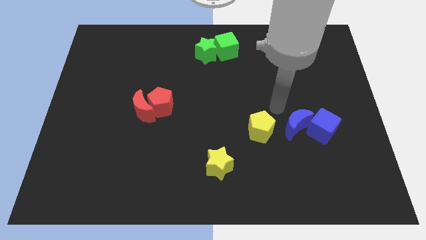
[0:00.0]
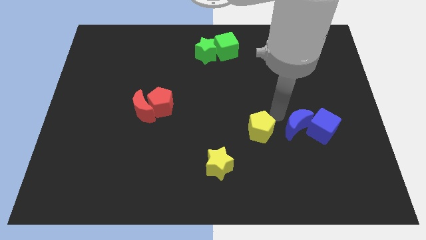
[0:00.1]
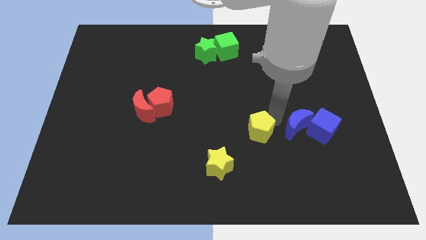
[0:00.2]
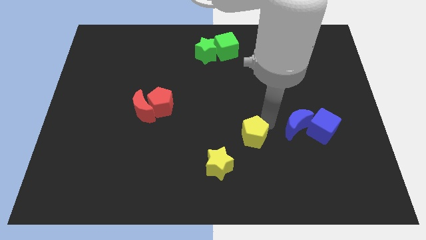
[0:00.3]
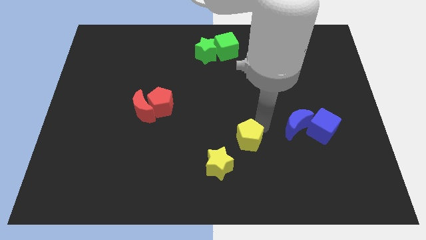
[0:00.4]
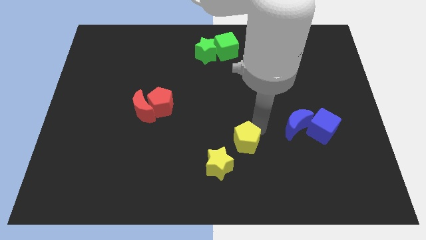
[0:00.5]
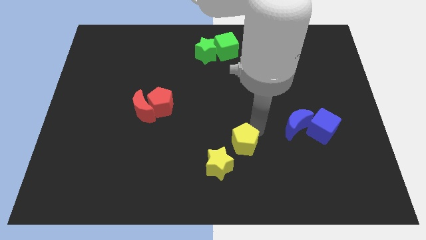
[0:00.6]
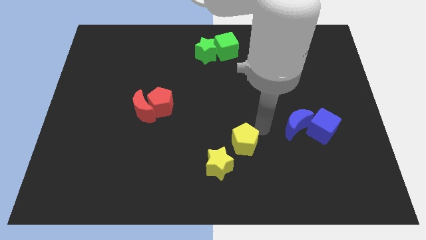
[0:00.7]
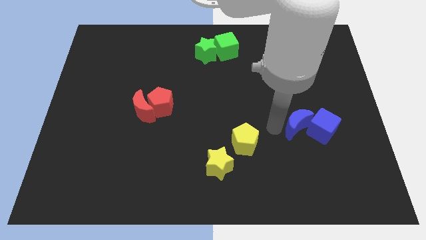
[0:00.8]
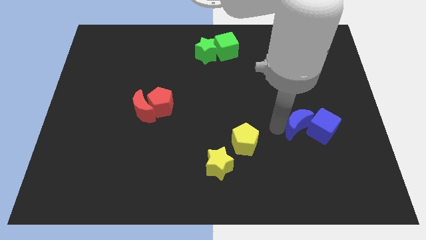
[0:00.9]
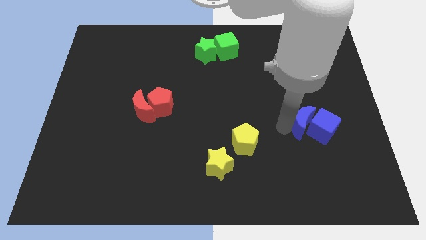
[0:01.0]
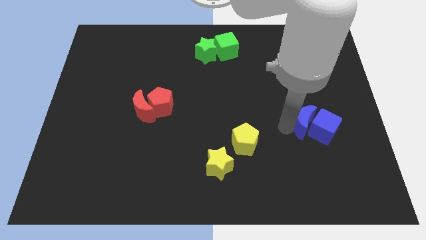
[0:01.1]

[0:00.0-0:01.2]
push the yellow pentagon close to the yellow star

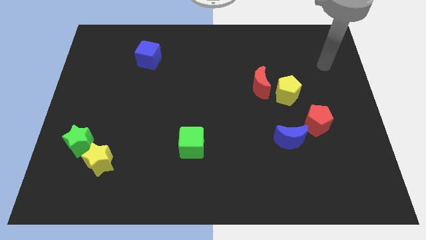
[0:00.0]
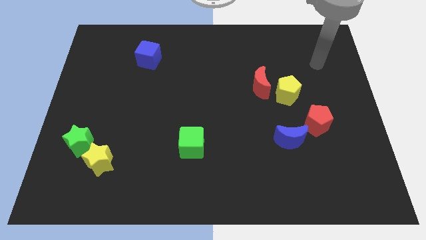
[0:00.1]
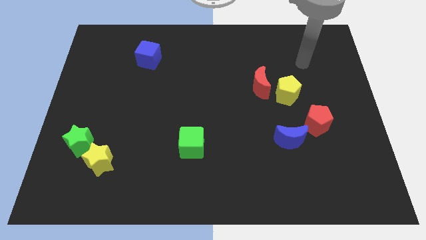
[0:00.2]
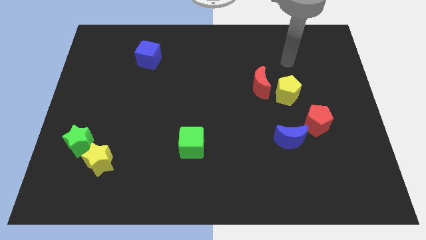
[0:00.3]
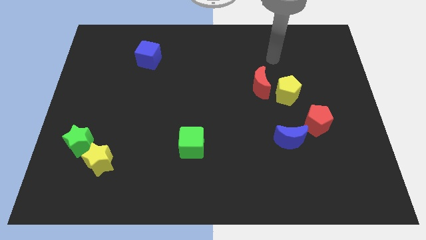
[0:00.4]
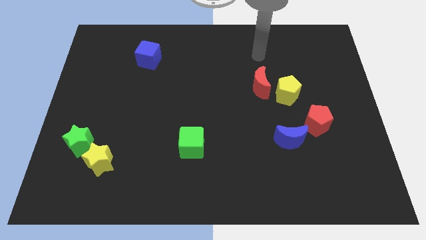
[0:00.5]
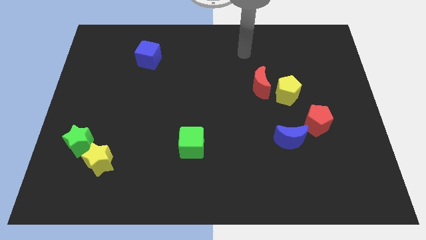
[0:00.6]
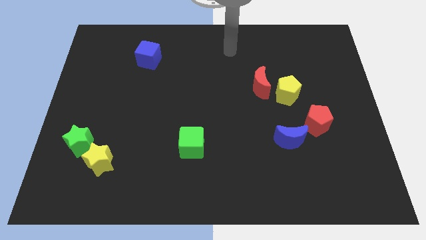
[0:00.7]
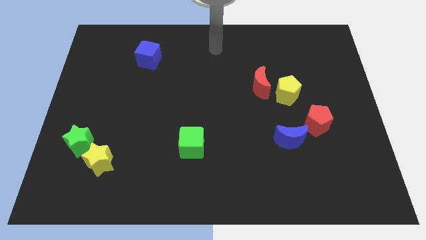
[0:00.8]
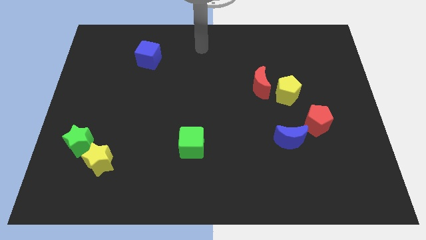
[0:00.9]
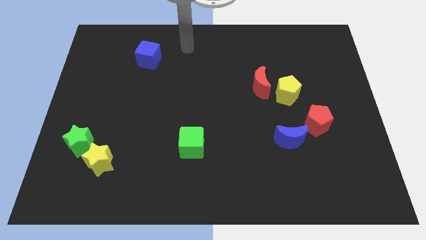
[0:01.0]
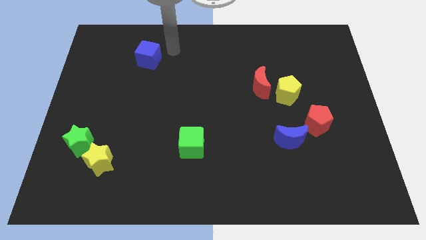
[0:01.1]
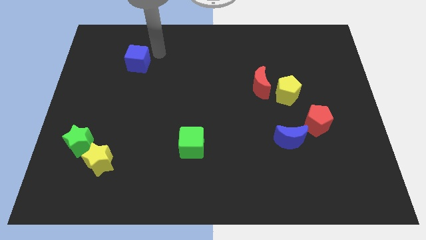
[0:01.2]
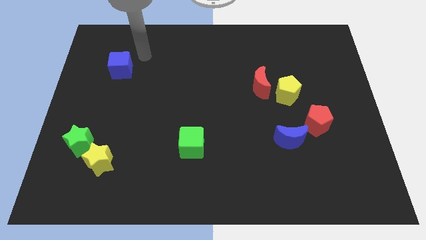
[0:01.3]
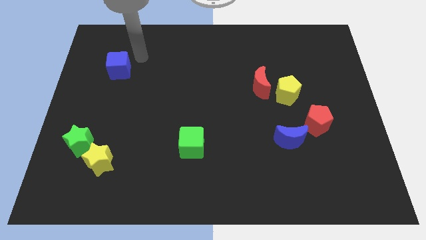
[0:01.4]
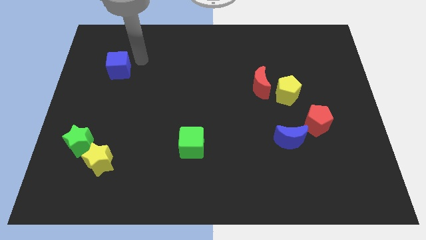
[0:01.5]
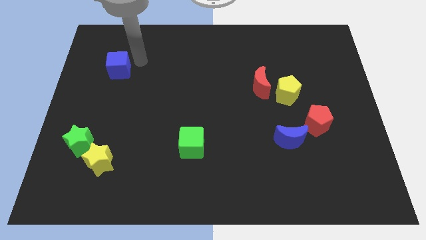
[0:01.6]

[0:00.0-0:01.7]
move your arm towards the blue cube

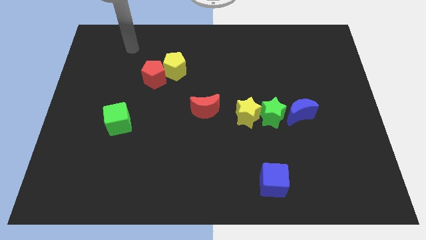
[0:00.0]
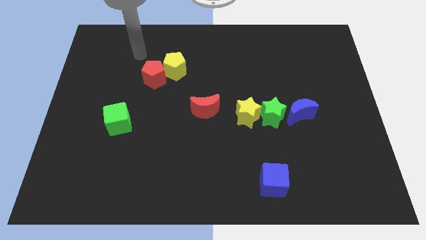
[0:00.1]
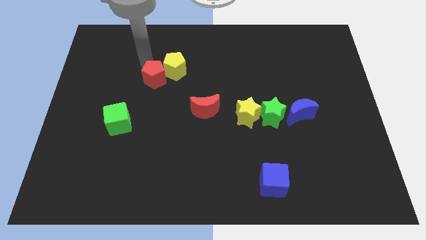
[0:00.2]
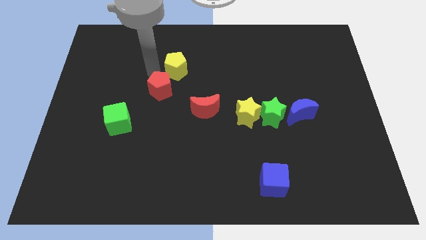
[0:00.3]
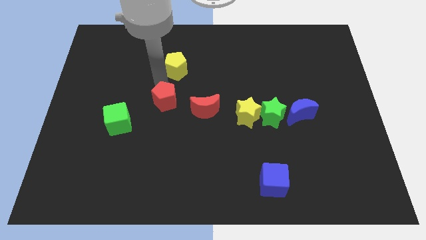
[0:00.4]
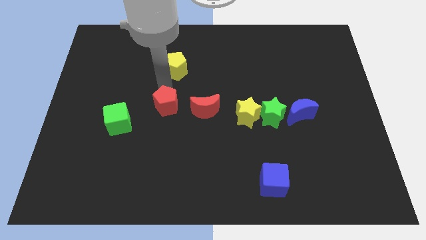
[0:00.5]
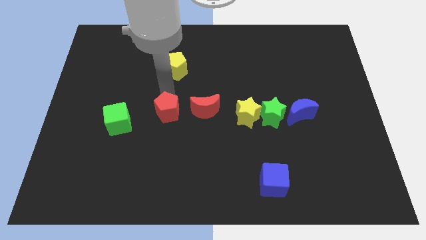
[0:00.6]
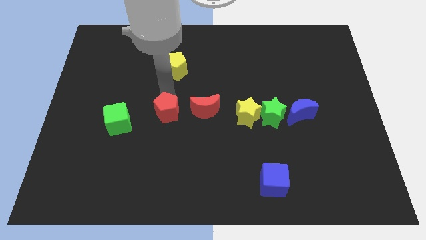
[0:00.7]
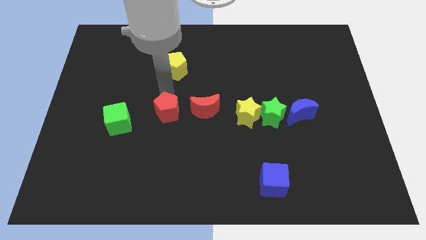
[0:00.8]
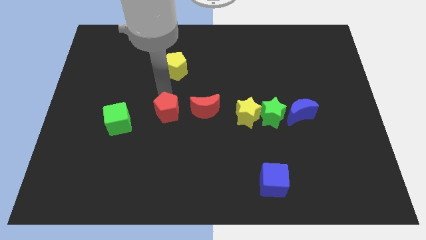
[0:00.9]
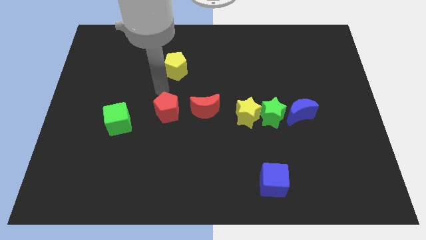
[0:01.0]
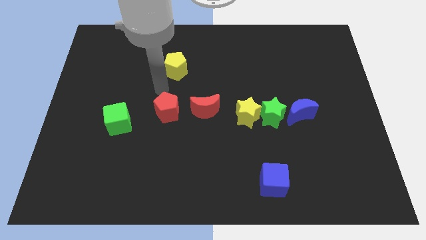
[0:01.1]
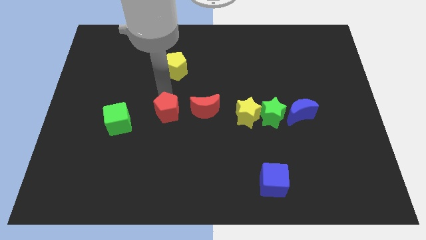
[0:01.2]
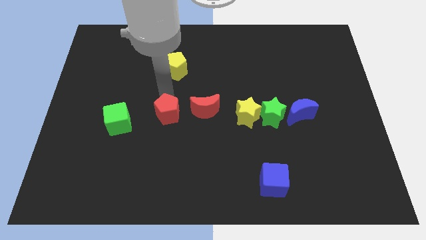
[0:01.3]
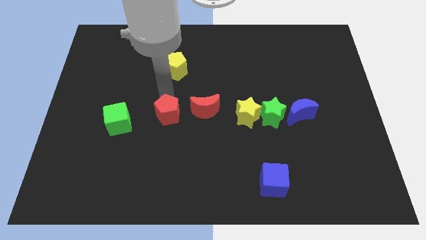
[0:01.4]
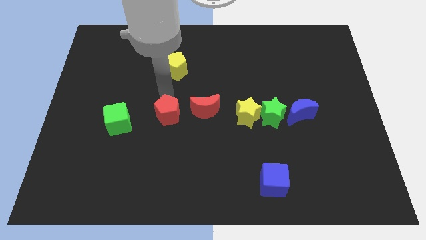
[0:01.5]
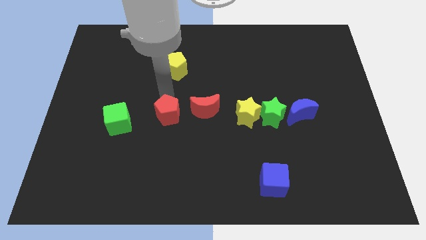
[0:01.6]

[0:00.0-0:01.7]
place the red pentagon to the left of the red crescent

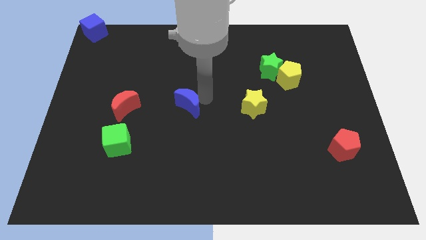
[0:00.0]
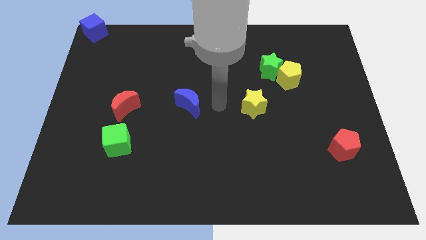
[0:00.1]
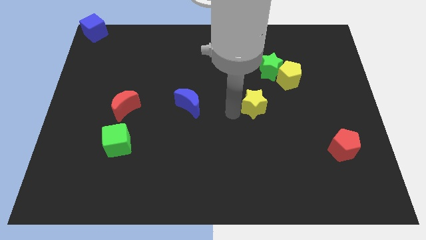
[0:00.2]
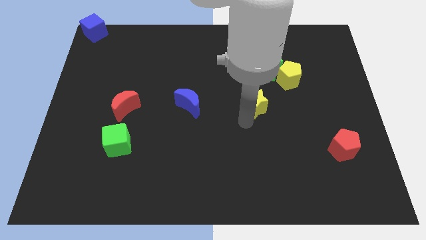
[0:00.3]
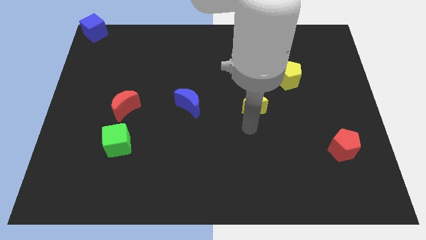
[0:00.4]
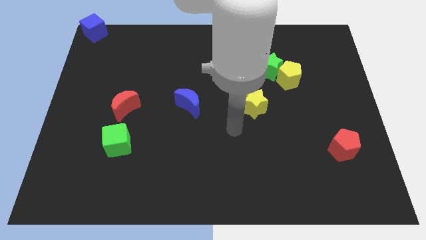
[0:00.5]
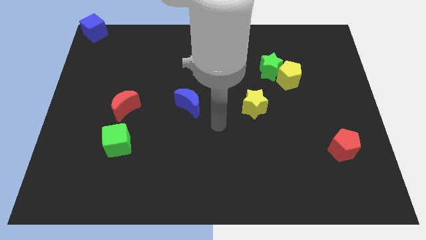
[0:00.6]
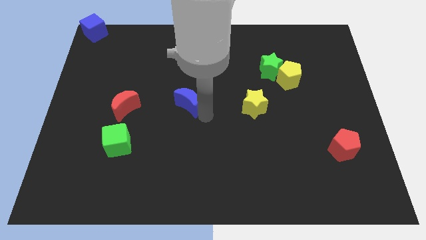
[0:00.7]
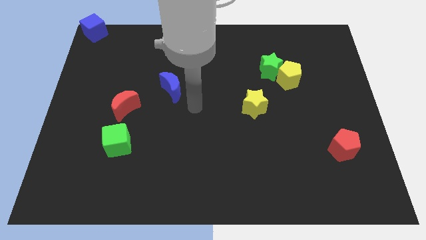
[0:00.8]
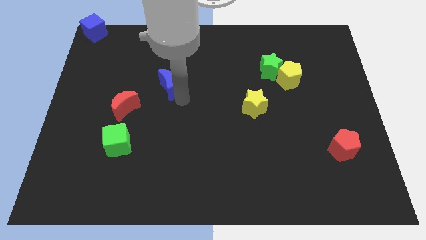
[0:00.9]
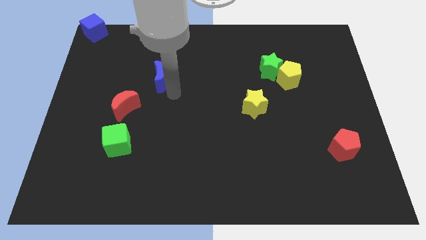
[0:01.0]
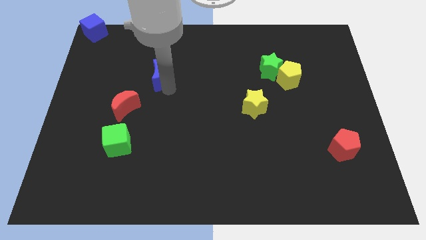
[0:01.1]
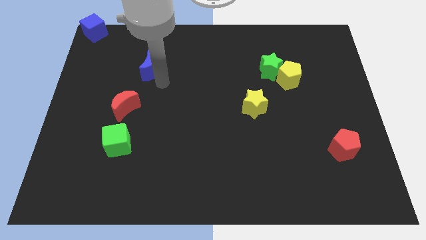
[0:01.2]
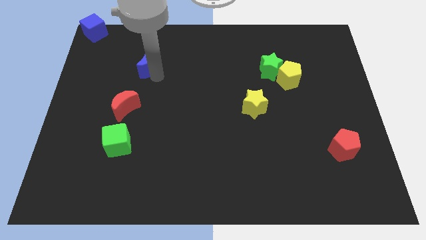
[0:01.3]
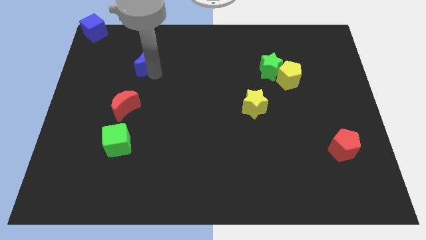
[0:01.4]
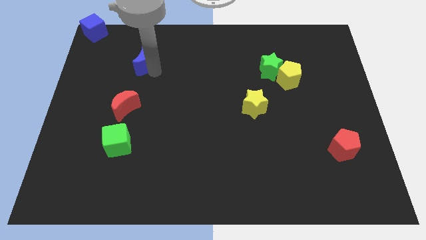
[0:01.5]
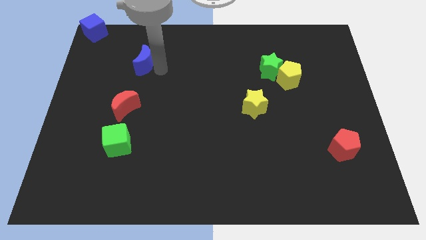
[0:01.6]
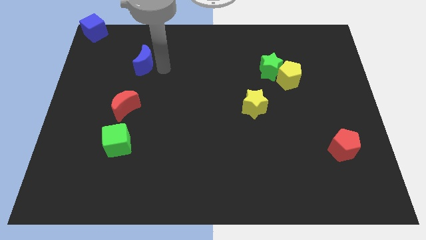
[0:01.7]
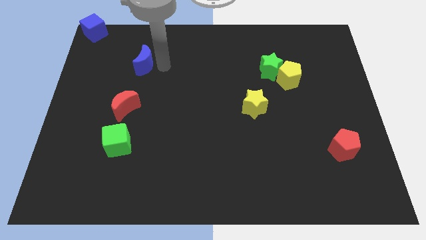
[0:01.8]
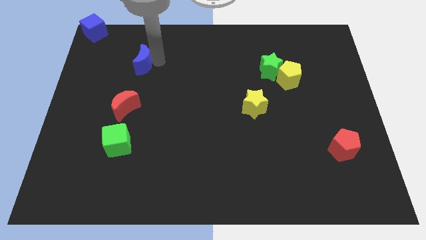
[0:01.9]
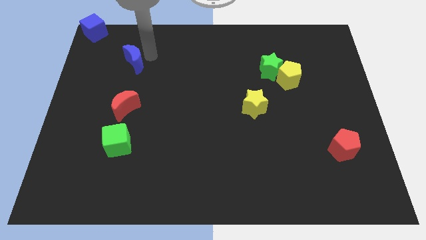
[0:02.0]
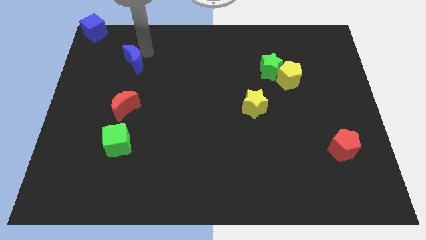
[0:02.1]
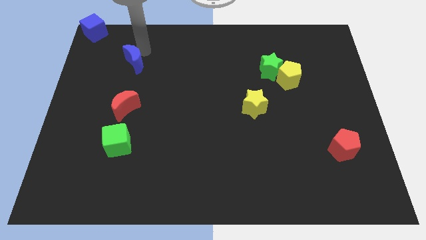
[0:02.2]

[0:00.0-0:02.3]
place the blue moon vertically above the red moon

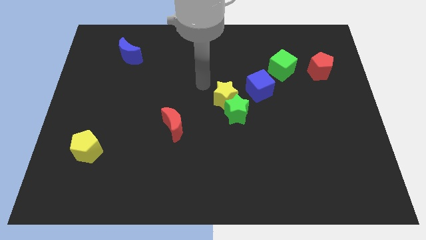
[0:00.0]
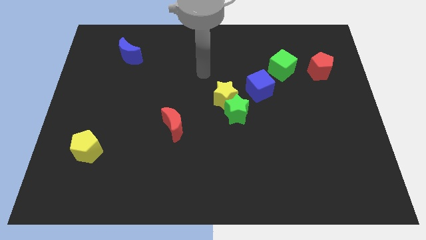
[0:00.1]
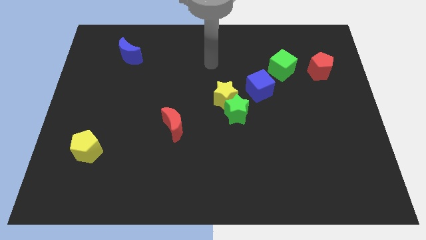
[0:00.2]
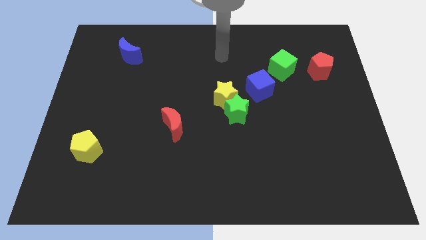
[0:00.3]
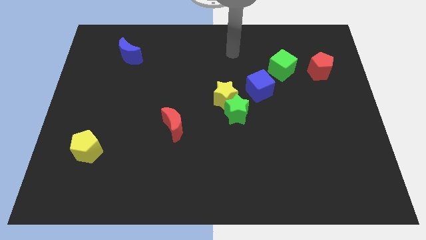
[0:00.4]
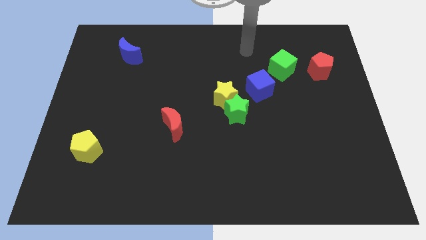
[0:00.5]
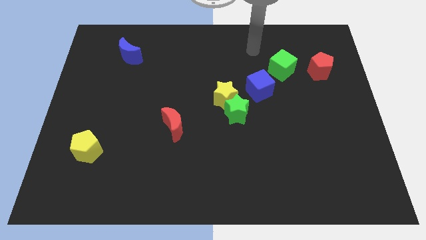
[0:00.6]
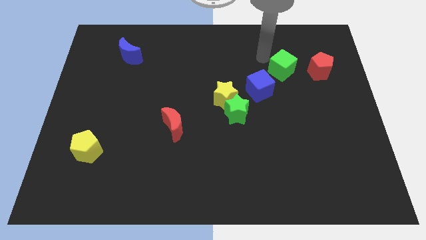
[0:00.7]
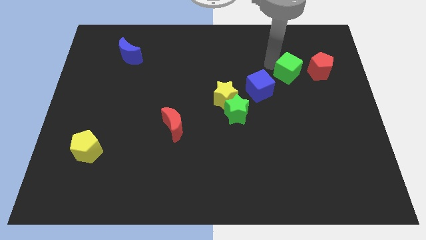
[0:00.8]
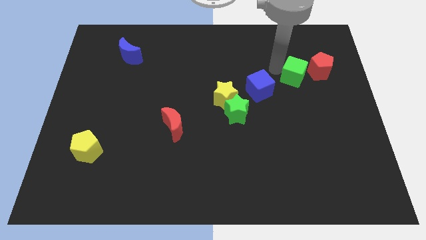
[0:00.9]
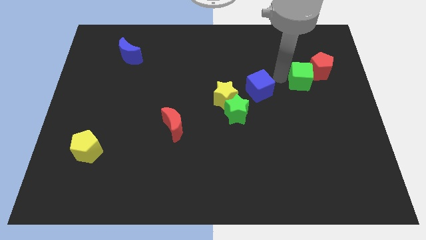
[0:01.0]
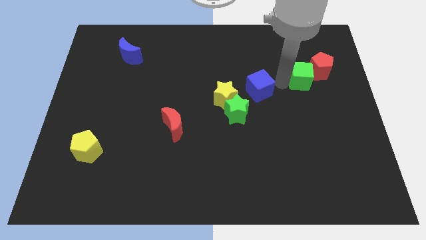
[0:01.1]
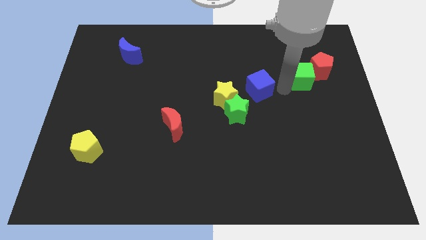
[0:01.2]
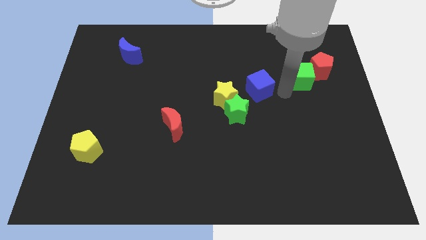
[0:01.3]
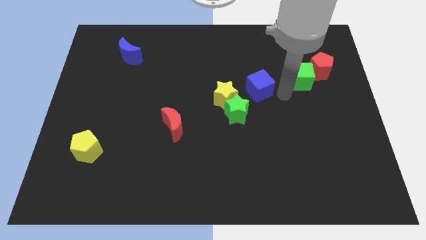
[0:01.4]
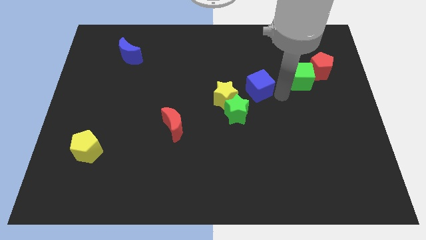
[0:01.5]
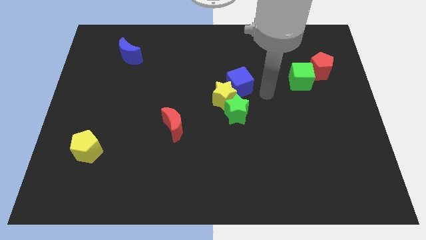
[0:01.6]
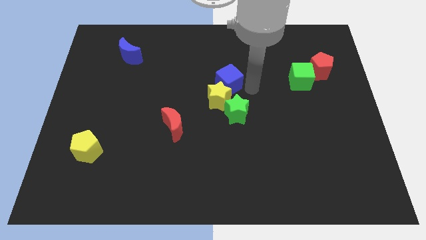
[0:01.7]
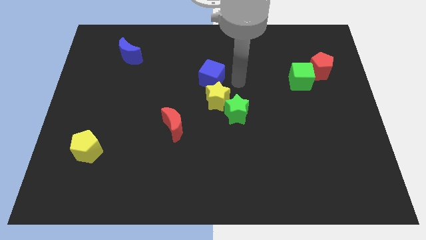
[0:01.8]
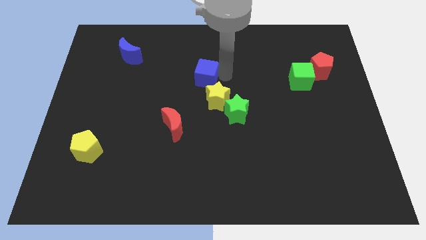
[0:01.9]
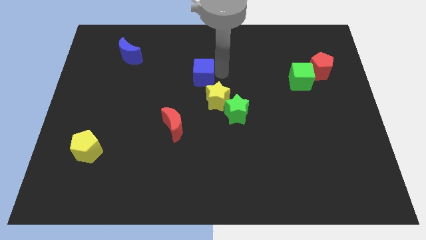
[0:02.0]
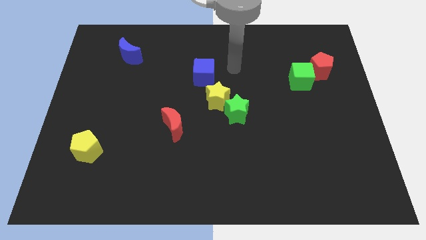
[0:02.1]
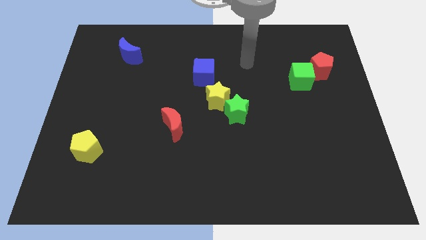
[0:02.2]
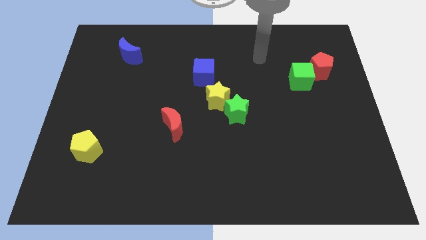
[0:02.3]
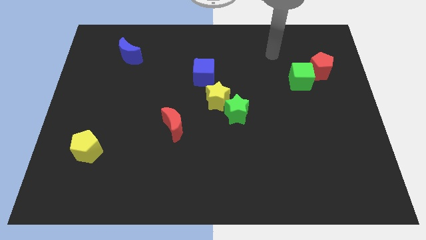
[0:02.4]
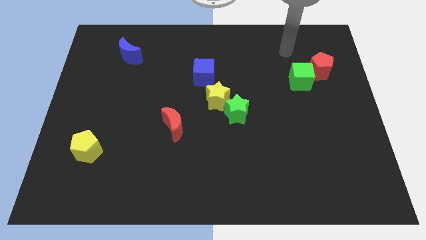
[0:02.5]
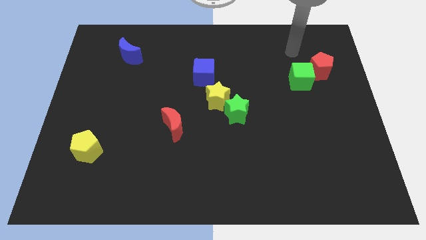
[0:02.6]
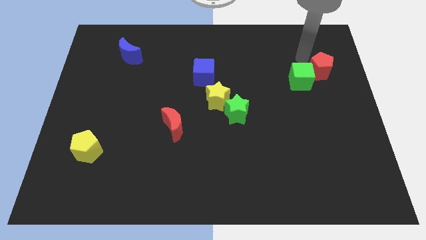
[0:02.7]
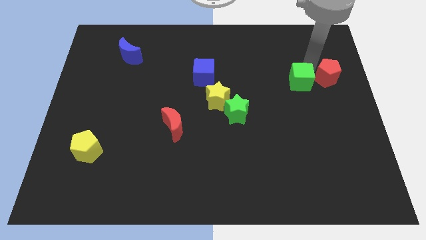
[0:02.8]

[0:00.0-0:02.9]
separate the bleu cube towards top of yellow star
